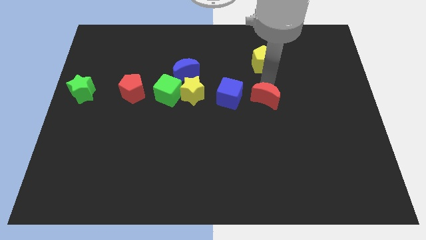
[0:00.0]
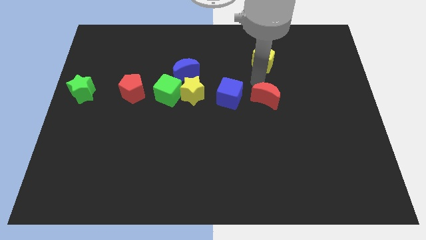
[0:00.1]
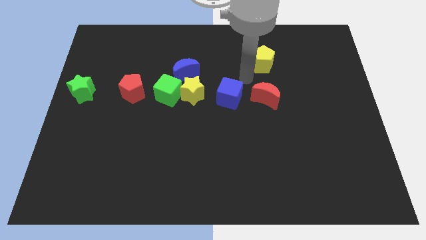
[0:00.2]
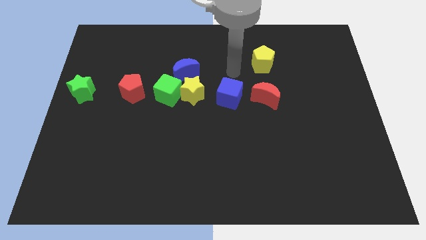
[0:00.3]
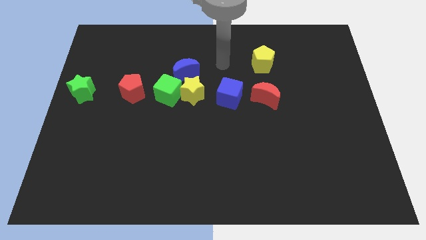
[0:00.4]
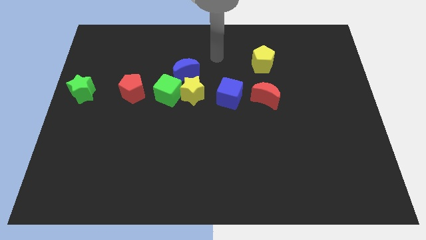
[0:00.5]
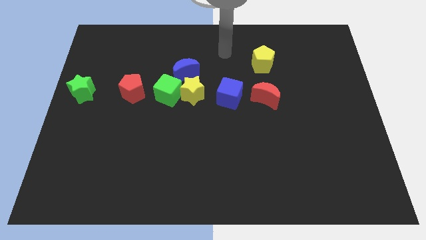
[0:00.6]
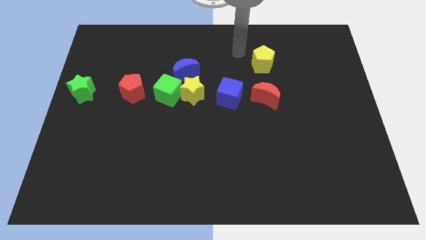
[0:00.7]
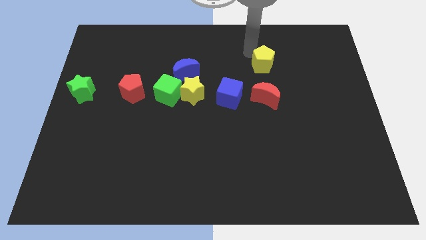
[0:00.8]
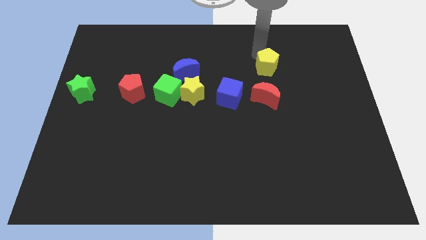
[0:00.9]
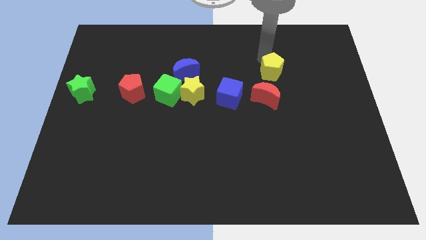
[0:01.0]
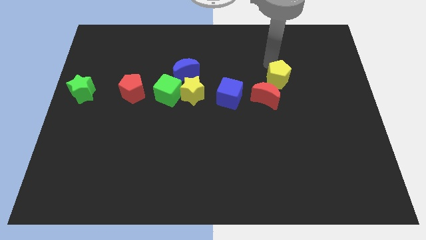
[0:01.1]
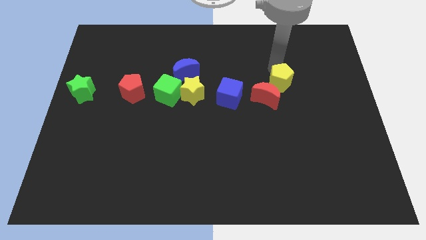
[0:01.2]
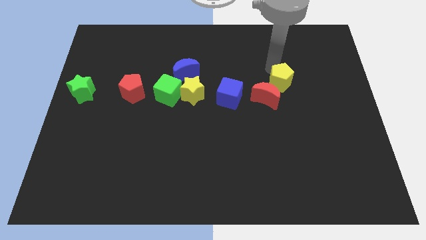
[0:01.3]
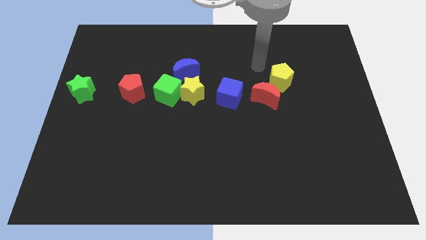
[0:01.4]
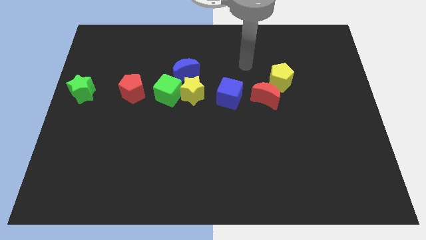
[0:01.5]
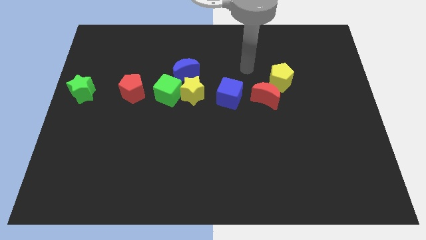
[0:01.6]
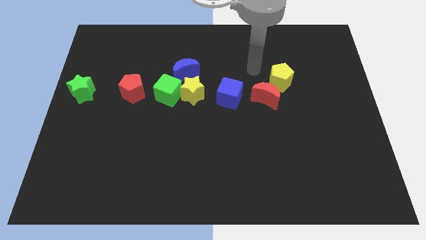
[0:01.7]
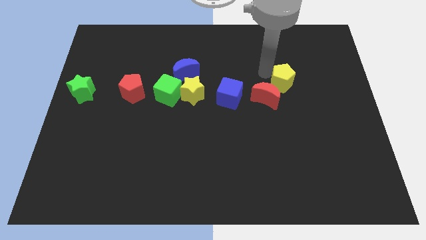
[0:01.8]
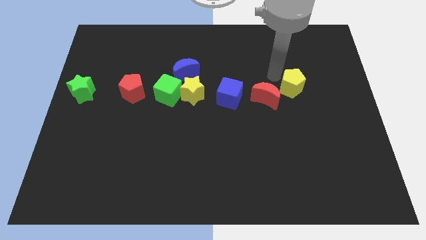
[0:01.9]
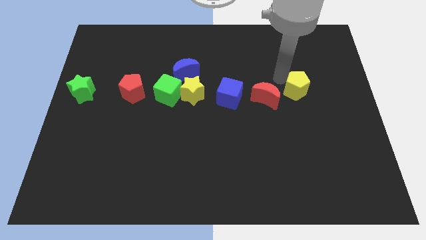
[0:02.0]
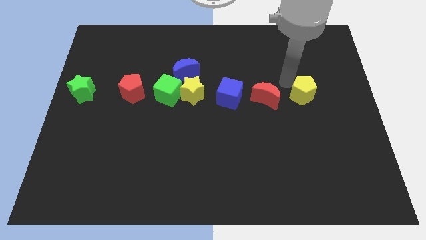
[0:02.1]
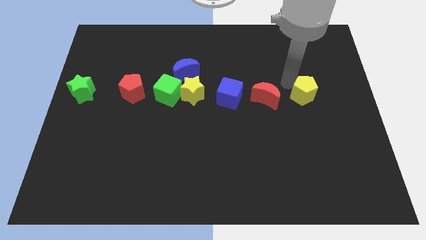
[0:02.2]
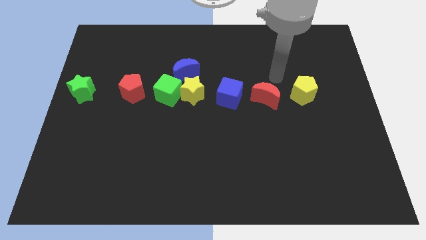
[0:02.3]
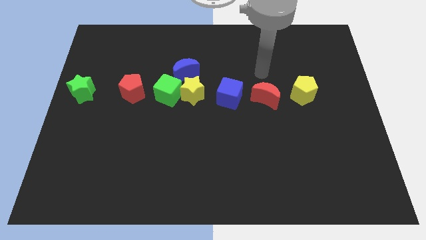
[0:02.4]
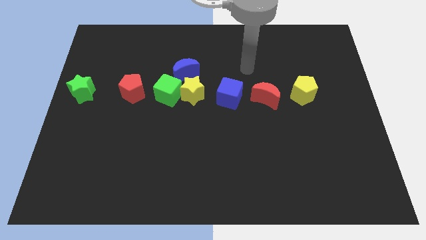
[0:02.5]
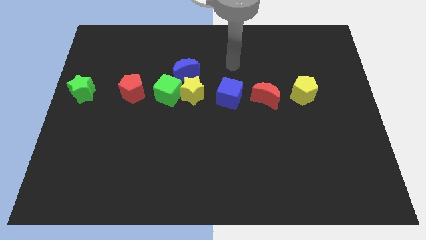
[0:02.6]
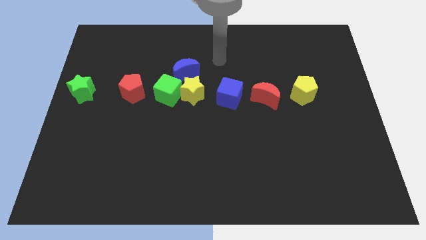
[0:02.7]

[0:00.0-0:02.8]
push the yellow pentagon to the right of the red crescent

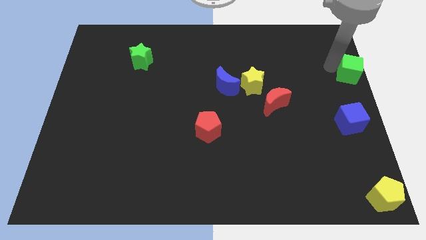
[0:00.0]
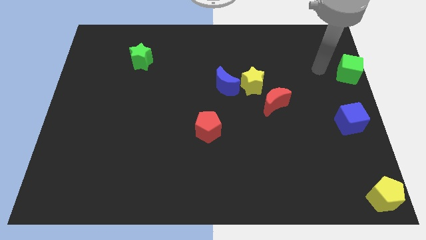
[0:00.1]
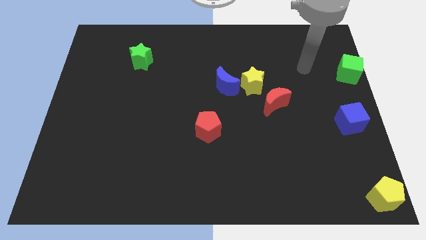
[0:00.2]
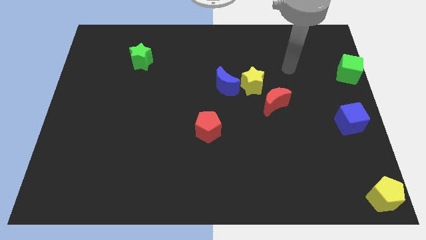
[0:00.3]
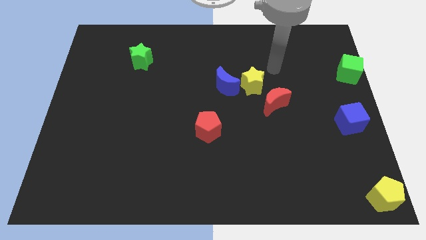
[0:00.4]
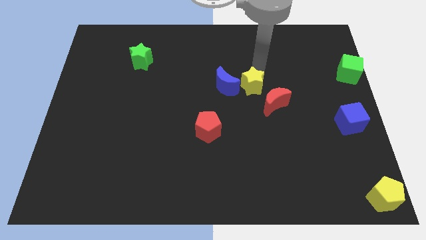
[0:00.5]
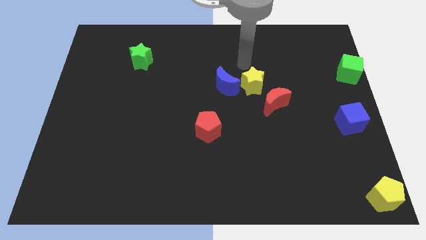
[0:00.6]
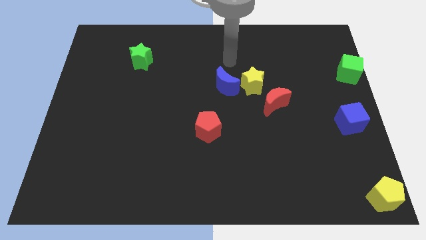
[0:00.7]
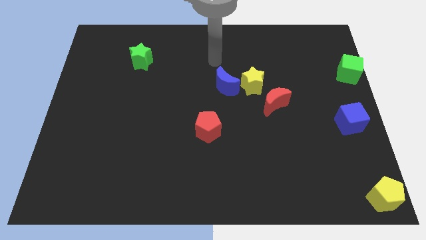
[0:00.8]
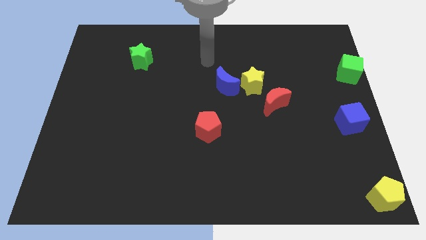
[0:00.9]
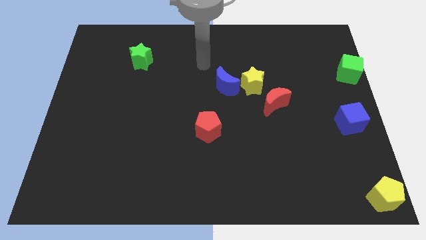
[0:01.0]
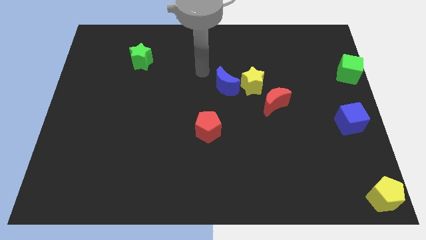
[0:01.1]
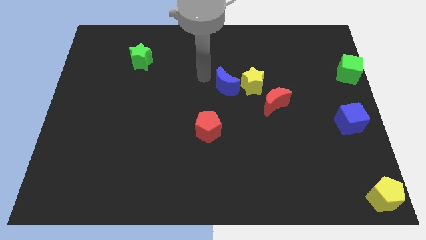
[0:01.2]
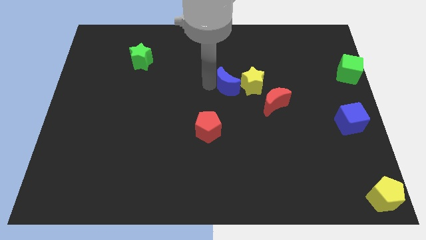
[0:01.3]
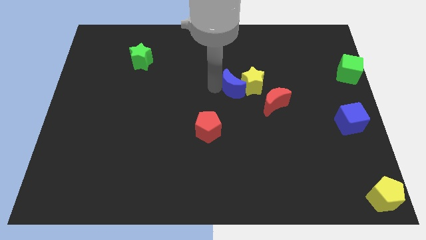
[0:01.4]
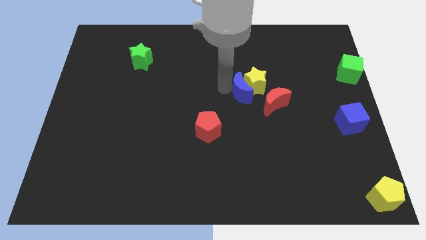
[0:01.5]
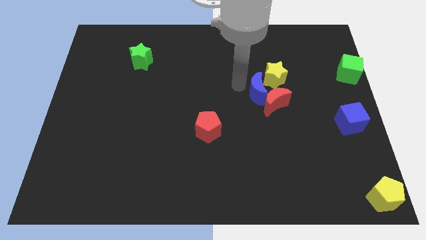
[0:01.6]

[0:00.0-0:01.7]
slide the blue moon close to the yellow star

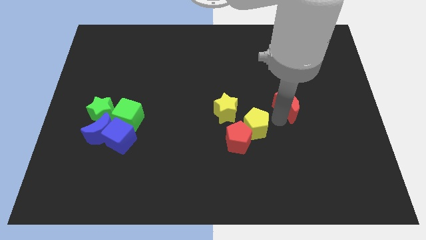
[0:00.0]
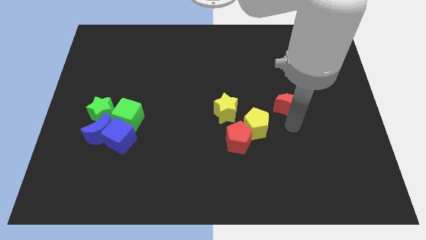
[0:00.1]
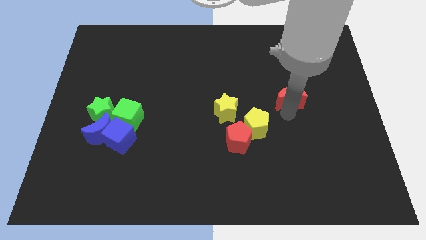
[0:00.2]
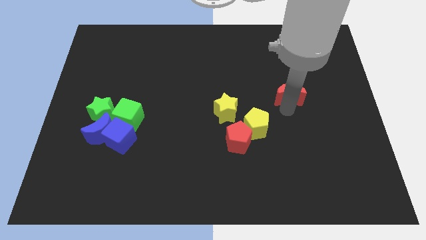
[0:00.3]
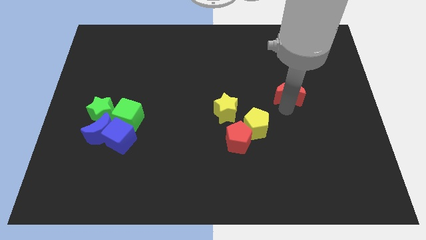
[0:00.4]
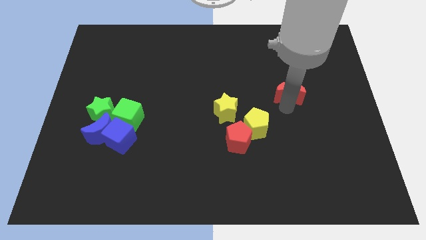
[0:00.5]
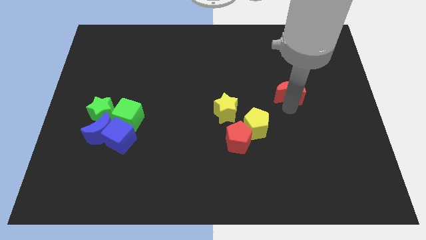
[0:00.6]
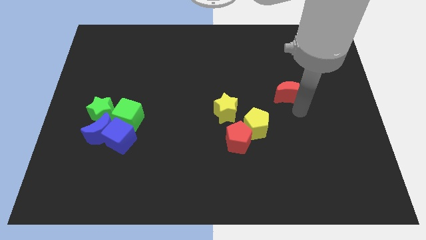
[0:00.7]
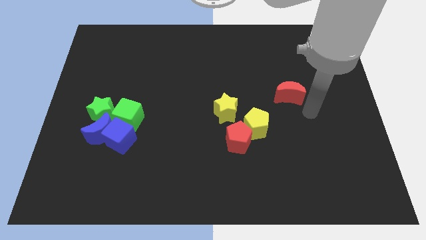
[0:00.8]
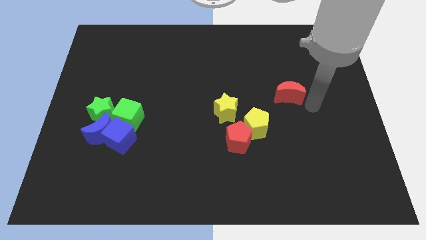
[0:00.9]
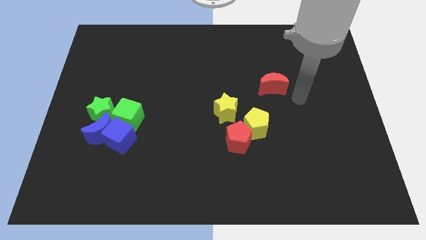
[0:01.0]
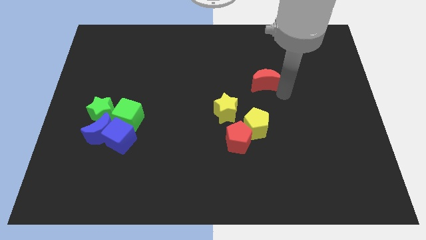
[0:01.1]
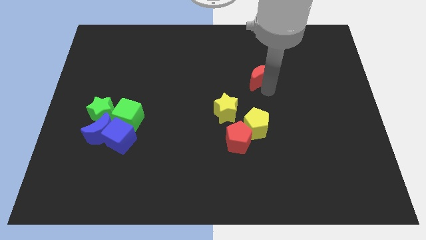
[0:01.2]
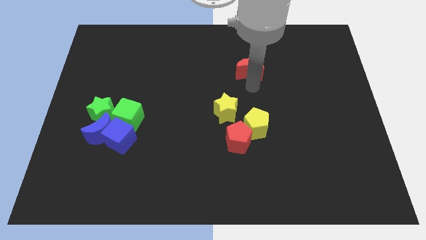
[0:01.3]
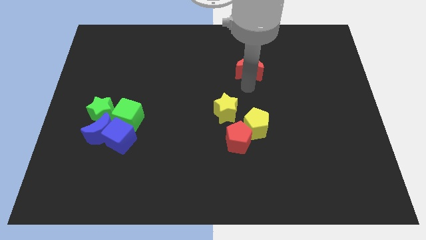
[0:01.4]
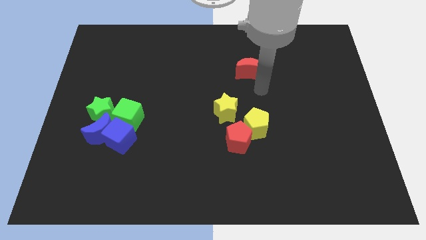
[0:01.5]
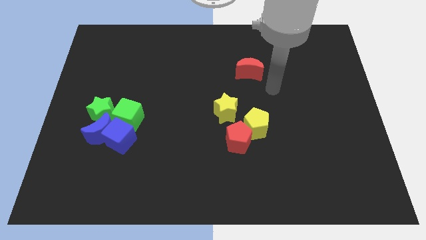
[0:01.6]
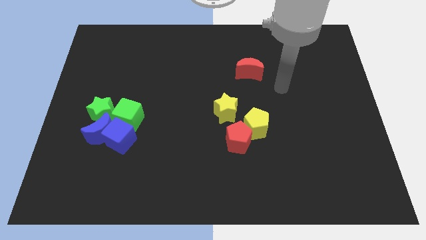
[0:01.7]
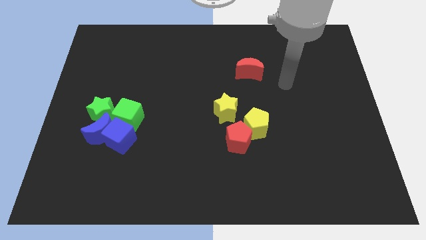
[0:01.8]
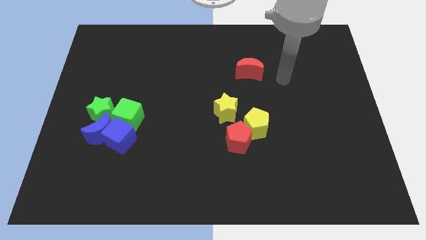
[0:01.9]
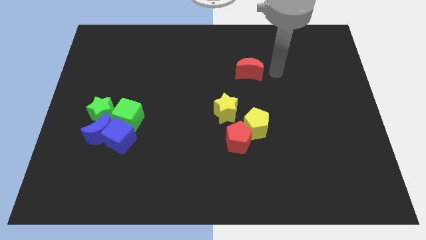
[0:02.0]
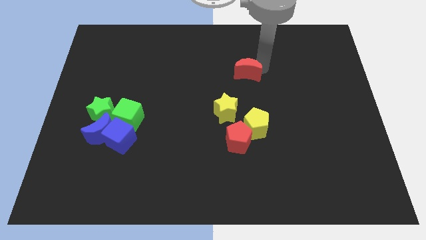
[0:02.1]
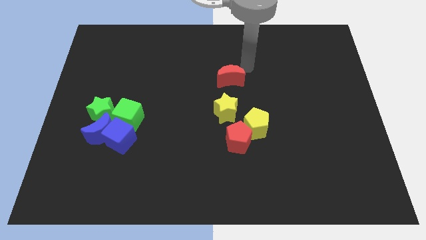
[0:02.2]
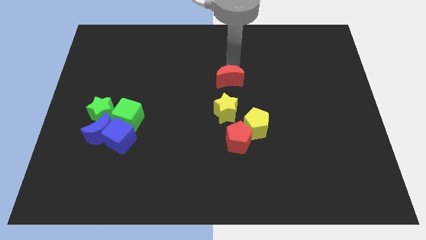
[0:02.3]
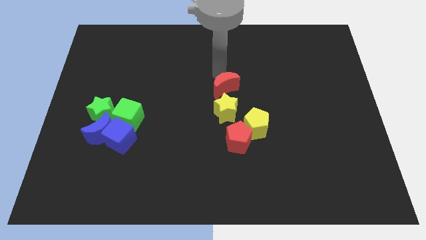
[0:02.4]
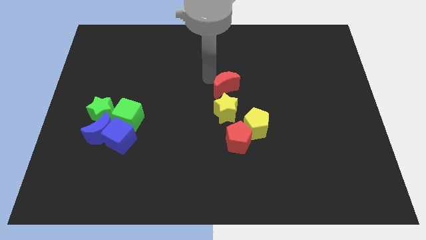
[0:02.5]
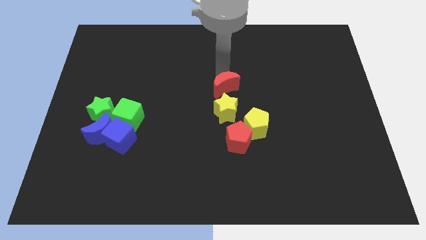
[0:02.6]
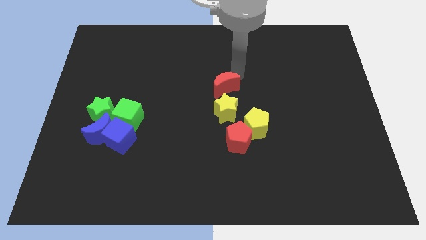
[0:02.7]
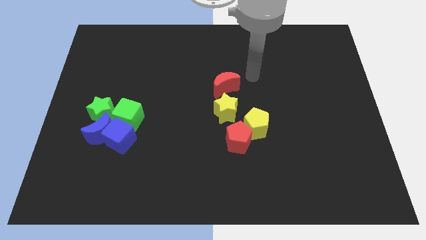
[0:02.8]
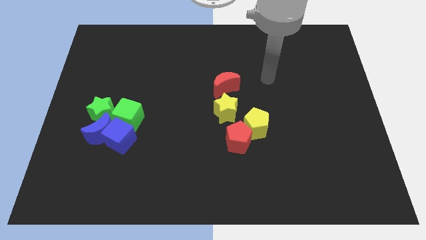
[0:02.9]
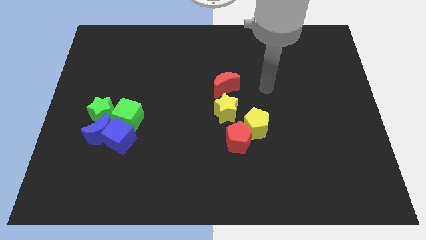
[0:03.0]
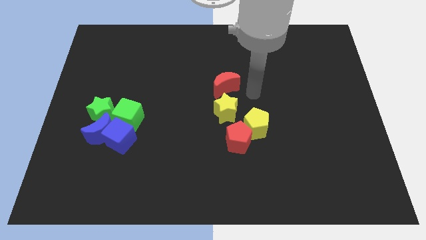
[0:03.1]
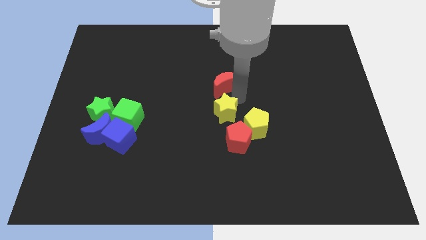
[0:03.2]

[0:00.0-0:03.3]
move the red crescent to the top of the yellow star

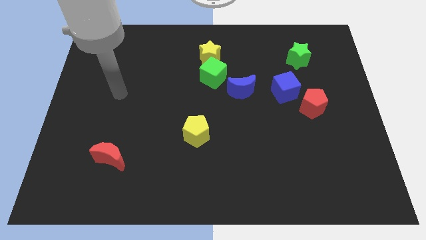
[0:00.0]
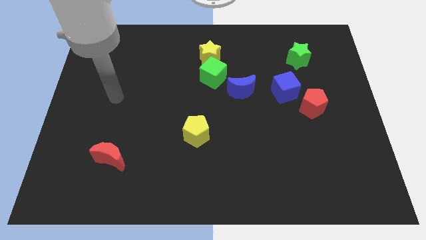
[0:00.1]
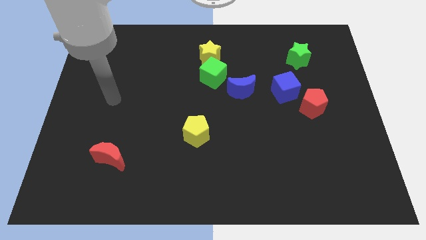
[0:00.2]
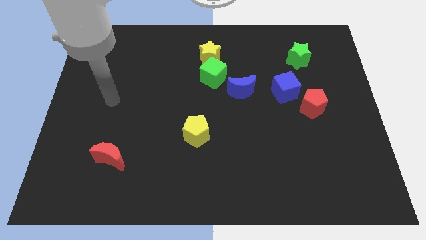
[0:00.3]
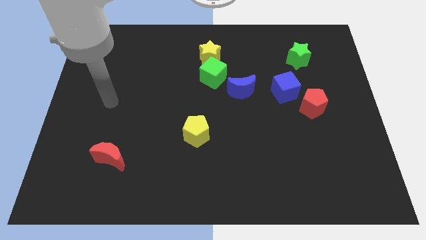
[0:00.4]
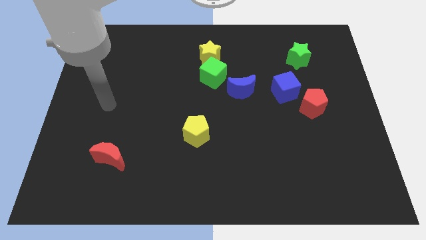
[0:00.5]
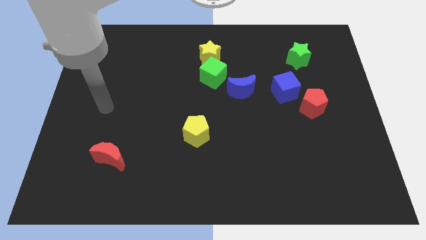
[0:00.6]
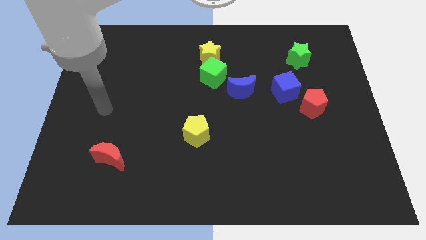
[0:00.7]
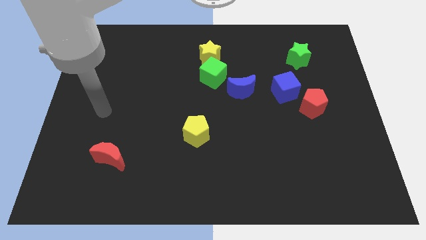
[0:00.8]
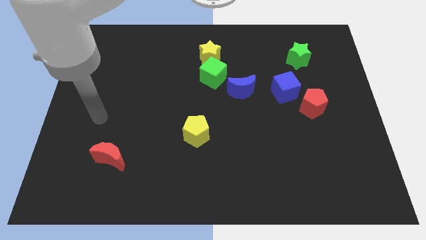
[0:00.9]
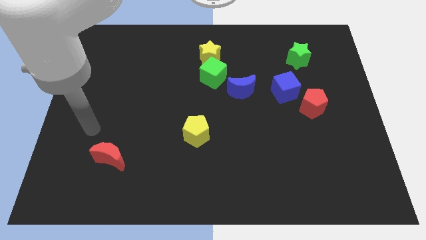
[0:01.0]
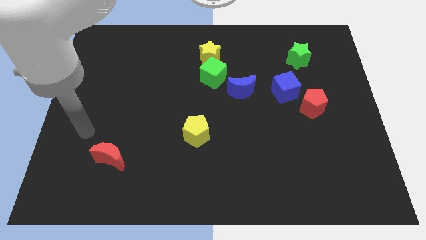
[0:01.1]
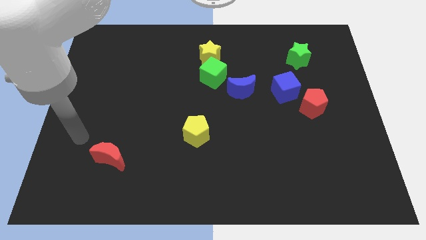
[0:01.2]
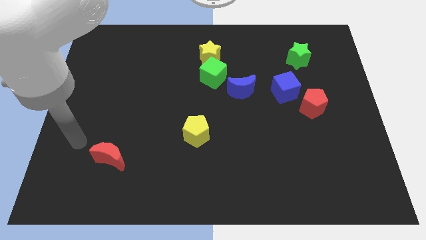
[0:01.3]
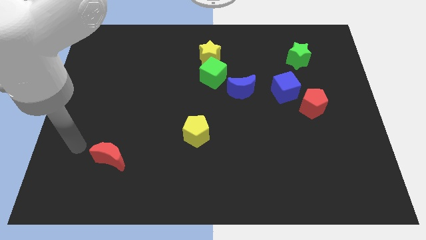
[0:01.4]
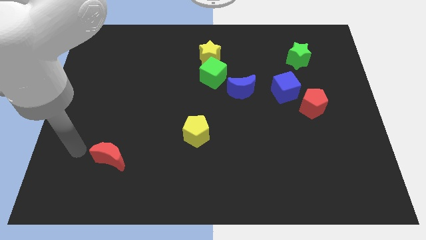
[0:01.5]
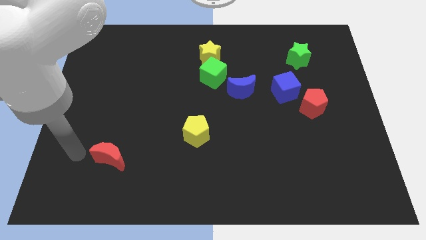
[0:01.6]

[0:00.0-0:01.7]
move your arm left to red moon
